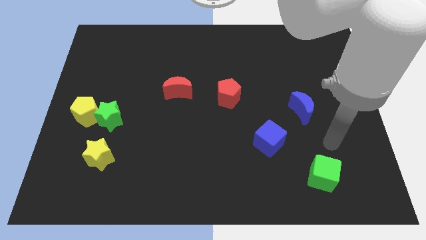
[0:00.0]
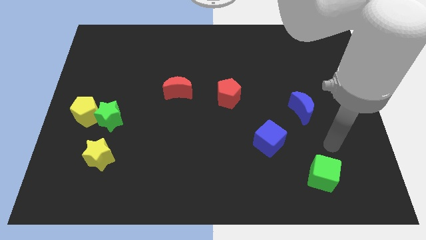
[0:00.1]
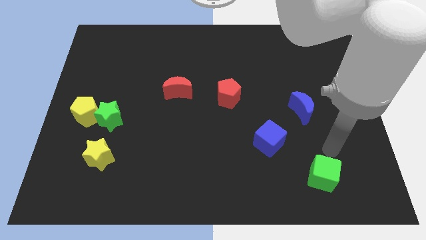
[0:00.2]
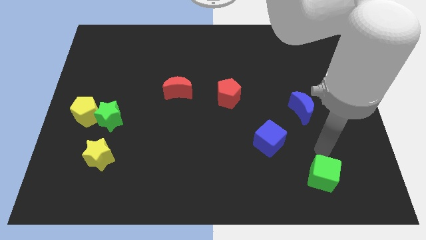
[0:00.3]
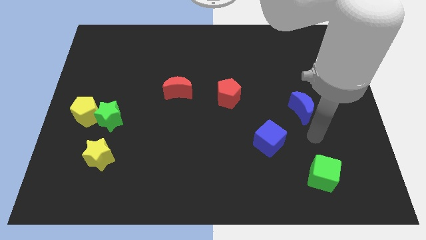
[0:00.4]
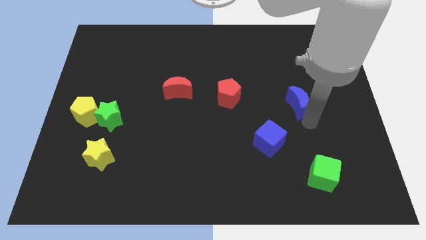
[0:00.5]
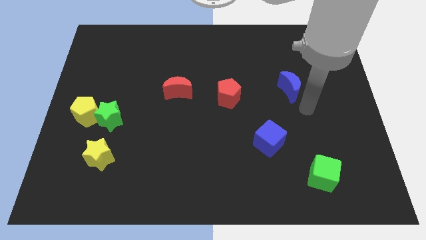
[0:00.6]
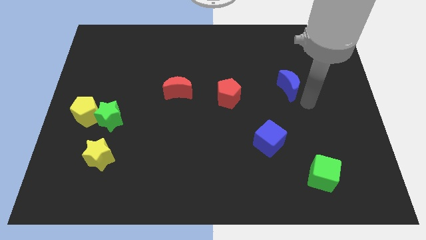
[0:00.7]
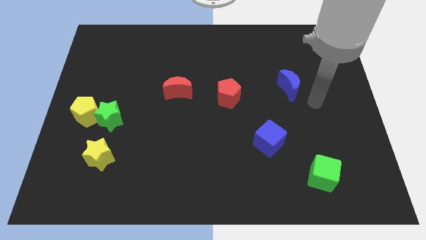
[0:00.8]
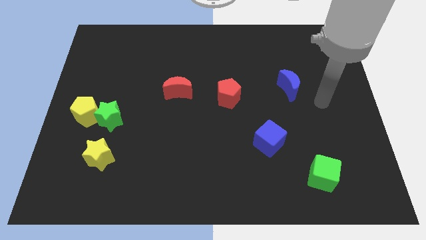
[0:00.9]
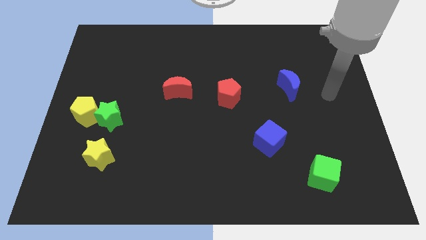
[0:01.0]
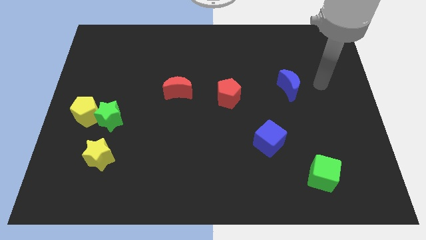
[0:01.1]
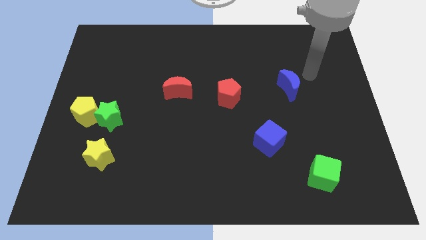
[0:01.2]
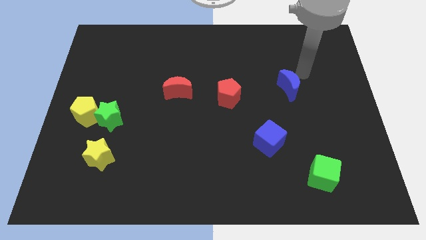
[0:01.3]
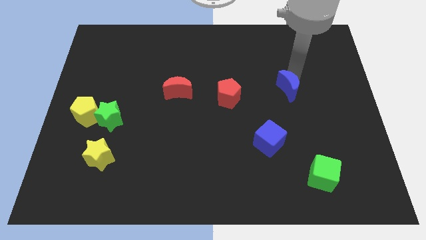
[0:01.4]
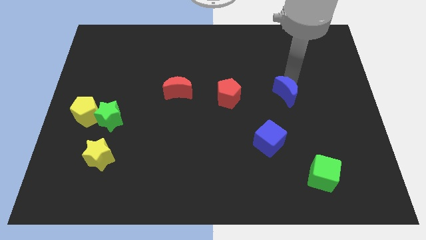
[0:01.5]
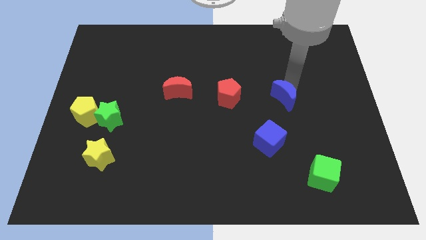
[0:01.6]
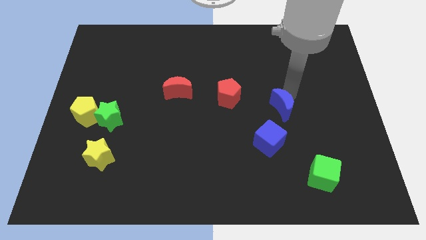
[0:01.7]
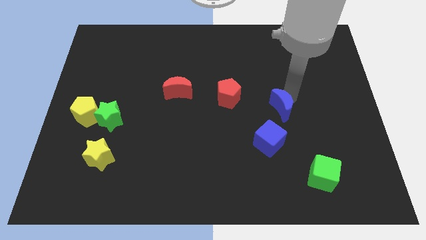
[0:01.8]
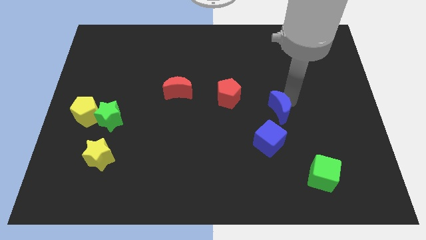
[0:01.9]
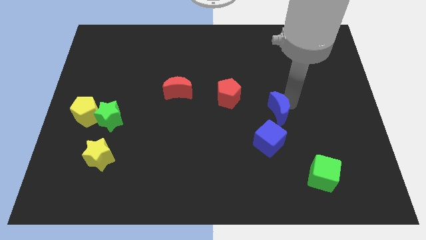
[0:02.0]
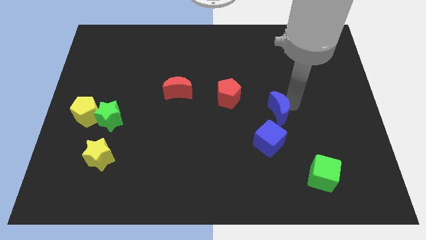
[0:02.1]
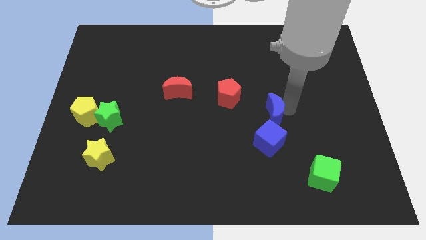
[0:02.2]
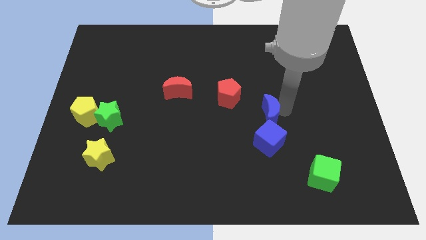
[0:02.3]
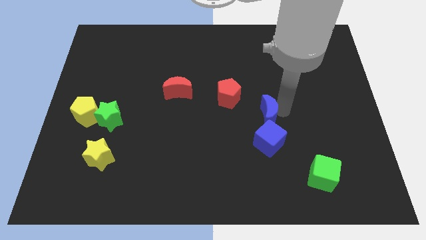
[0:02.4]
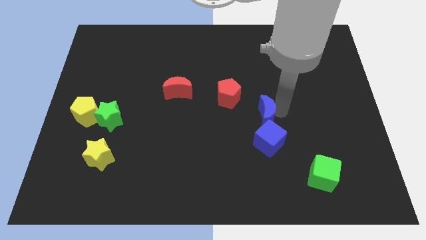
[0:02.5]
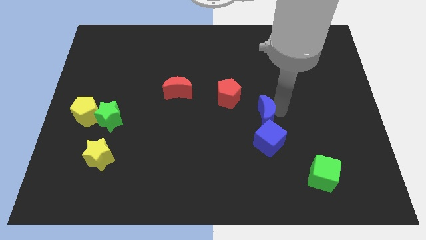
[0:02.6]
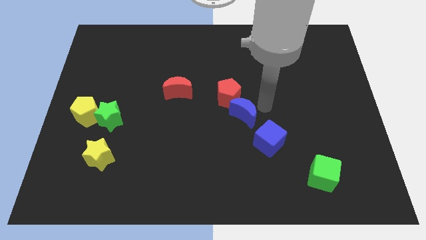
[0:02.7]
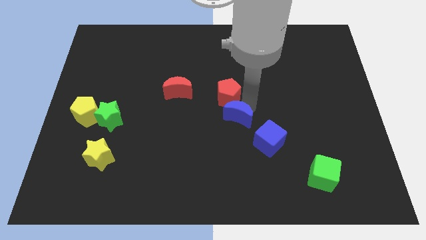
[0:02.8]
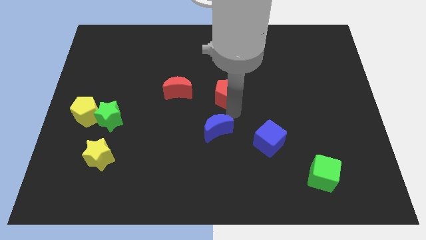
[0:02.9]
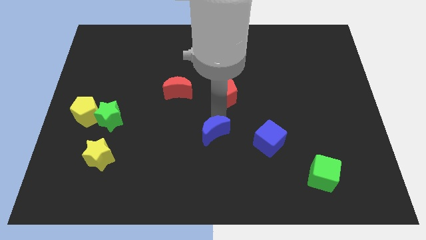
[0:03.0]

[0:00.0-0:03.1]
slide blue moon to the left of blue cube

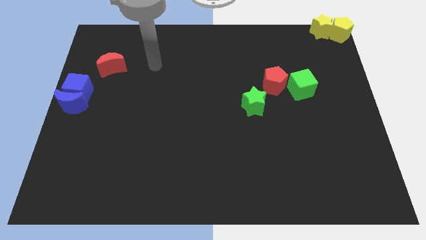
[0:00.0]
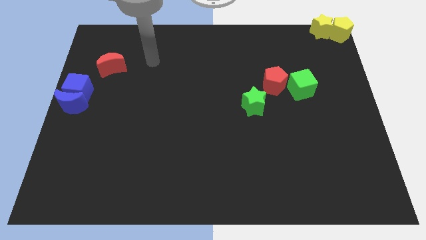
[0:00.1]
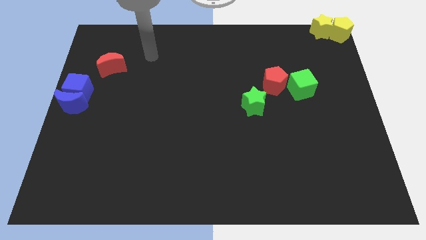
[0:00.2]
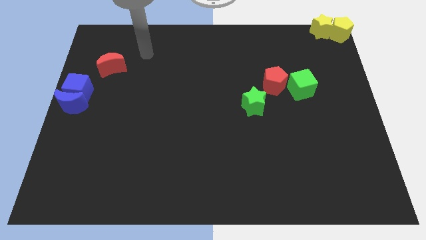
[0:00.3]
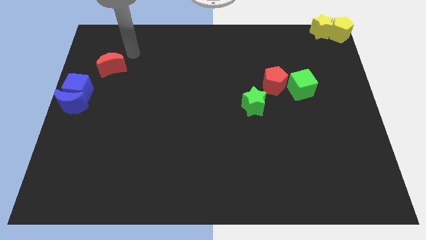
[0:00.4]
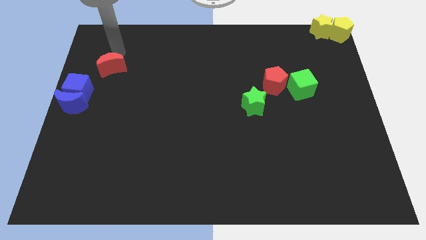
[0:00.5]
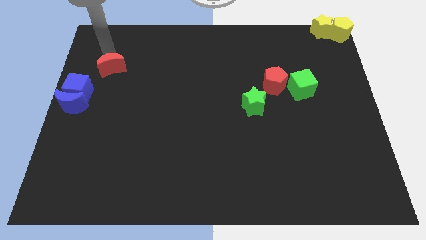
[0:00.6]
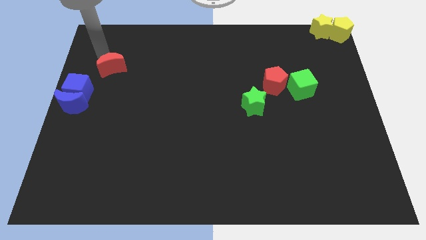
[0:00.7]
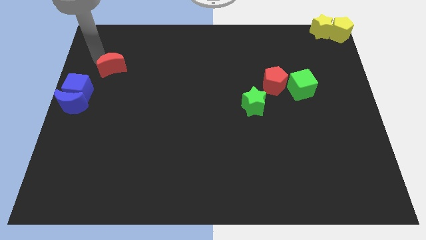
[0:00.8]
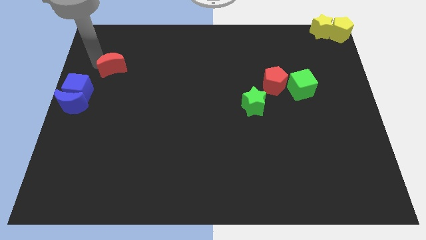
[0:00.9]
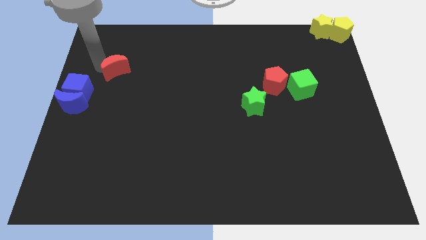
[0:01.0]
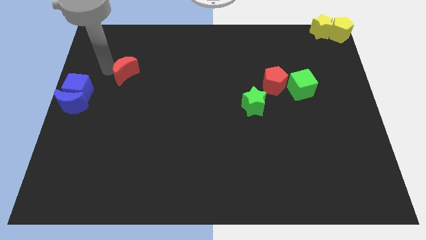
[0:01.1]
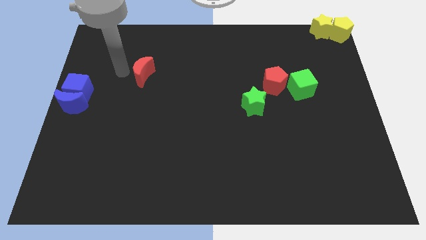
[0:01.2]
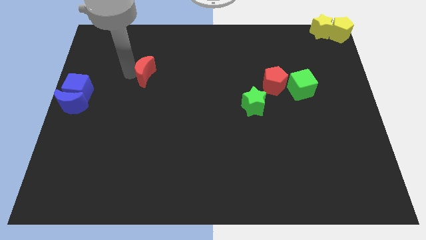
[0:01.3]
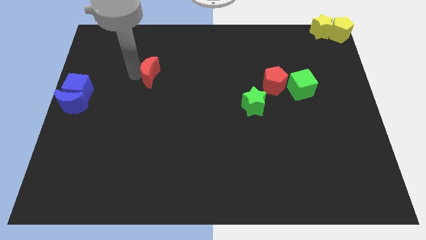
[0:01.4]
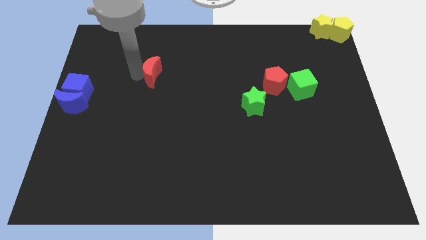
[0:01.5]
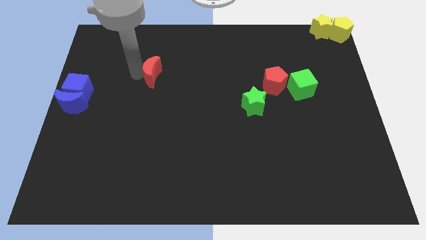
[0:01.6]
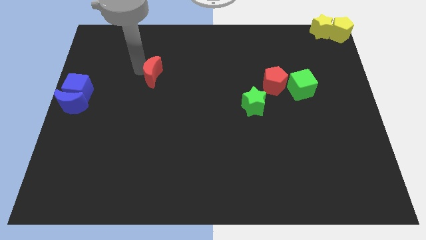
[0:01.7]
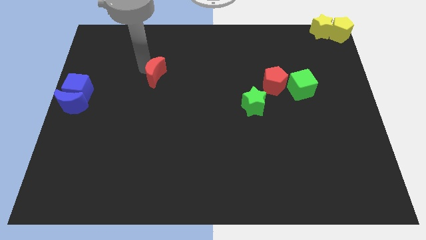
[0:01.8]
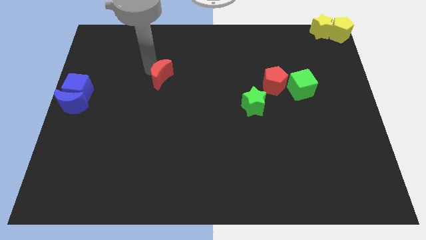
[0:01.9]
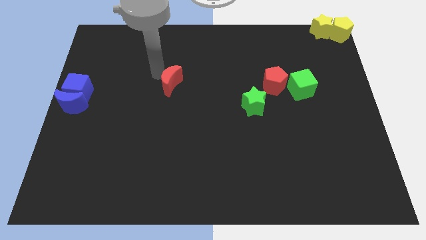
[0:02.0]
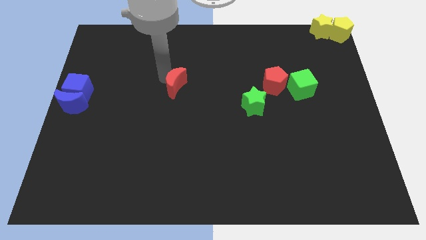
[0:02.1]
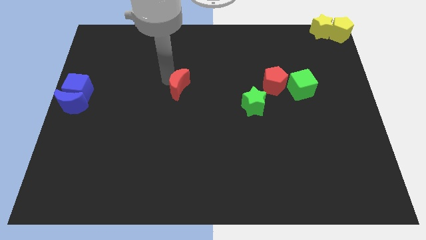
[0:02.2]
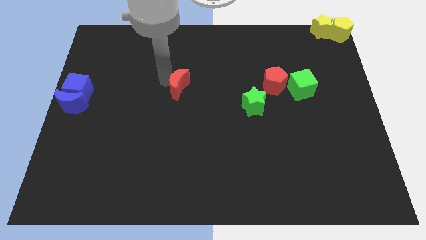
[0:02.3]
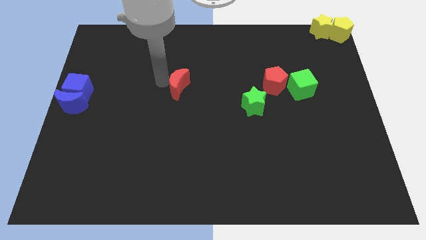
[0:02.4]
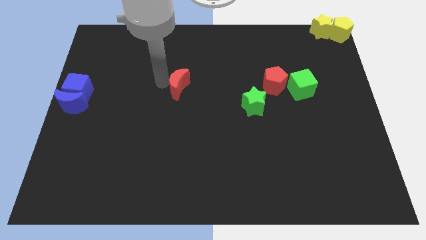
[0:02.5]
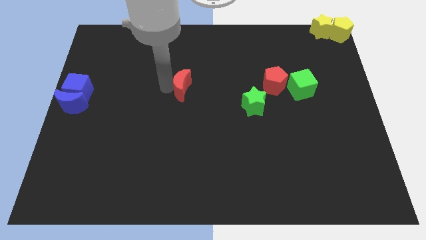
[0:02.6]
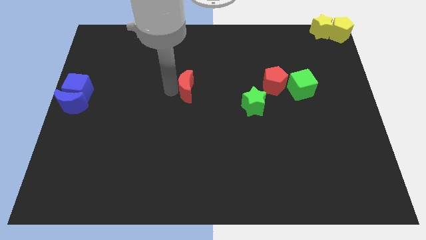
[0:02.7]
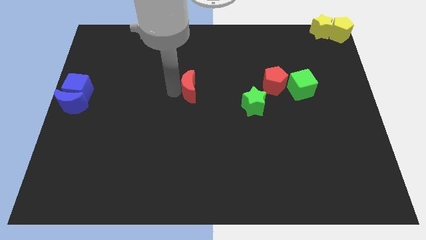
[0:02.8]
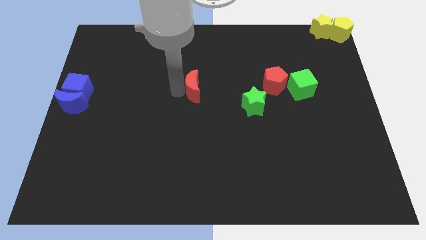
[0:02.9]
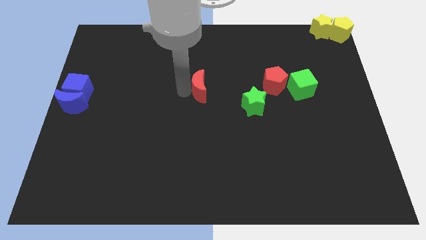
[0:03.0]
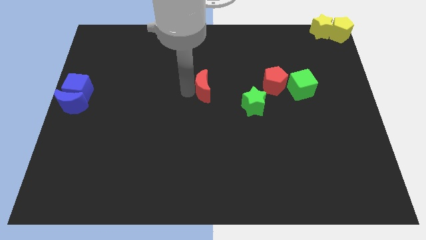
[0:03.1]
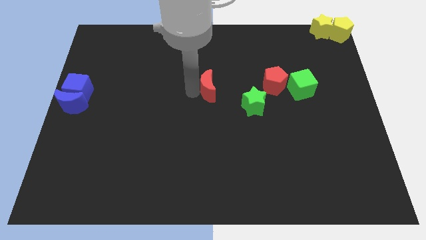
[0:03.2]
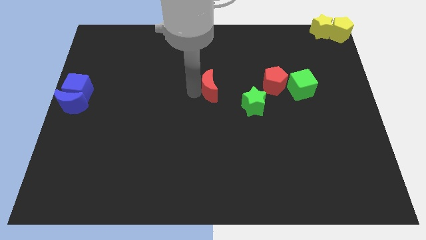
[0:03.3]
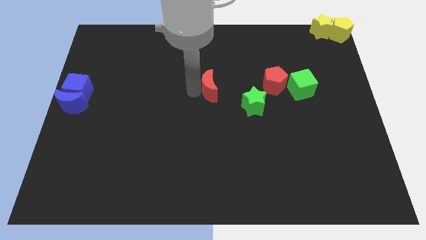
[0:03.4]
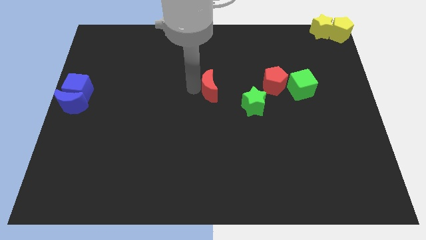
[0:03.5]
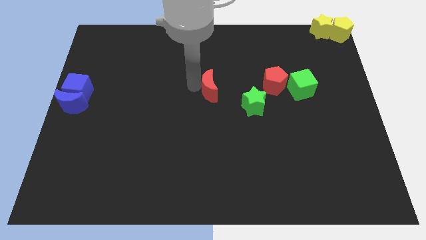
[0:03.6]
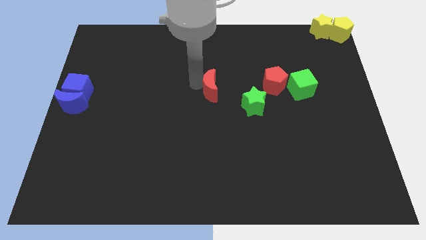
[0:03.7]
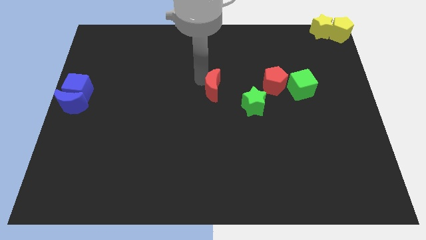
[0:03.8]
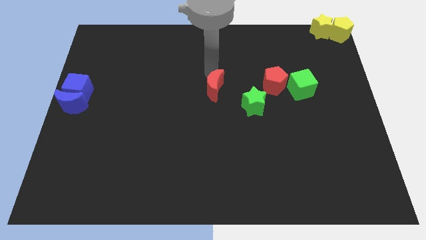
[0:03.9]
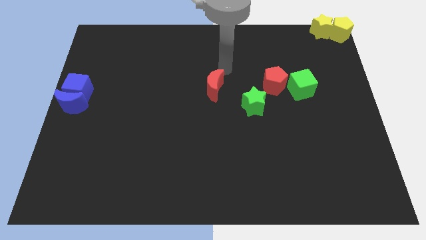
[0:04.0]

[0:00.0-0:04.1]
place the red moon at the center

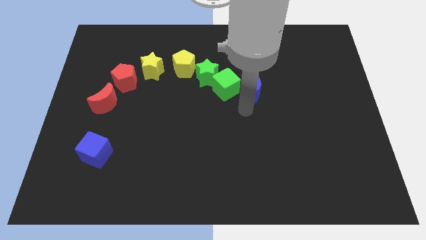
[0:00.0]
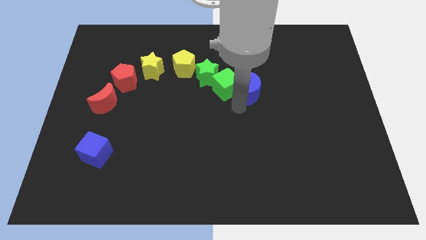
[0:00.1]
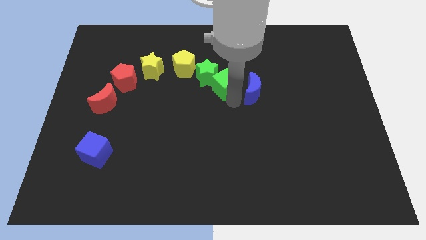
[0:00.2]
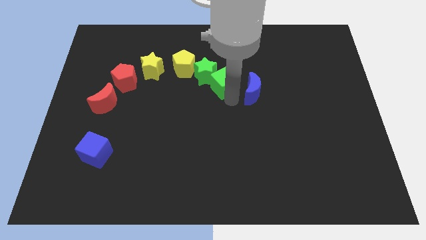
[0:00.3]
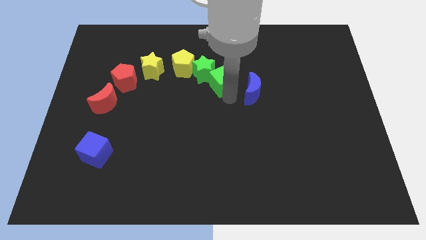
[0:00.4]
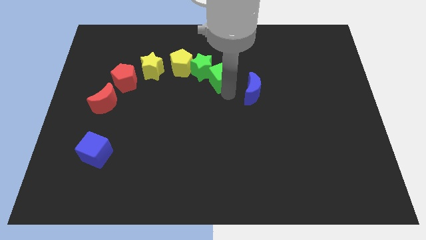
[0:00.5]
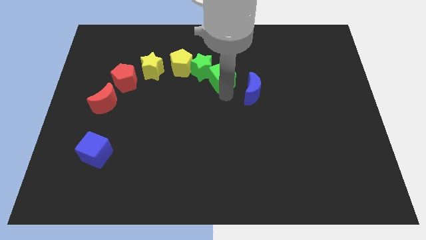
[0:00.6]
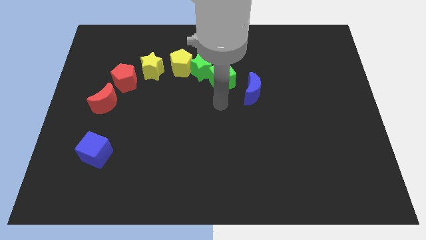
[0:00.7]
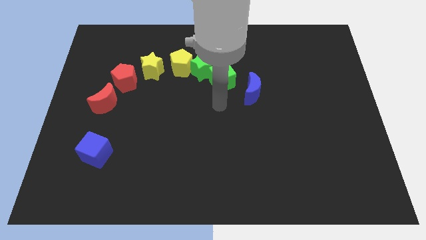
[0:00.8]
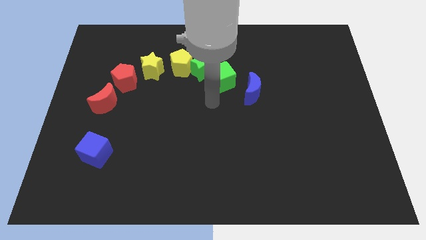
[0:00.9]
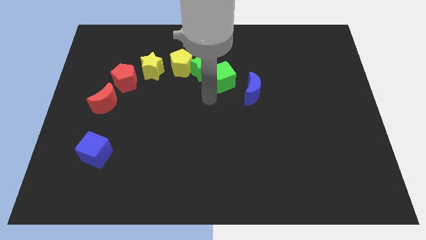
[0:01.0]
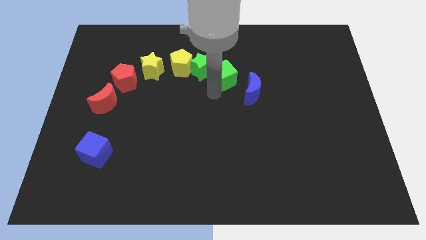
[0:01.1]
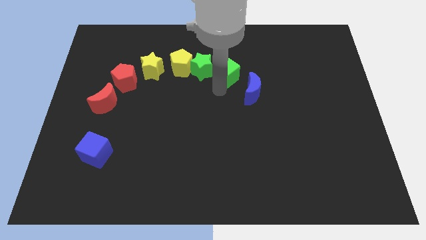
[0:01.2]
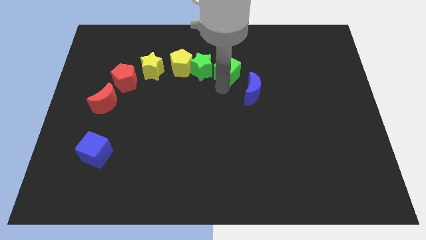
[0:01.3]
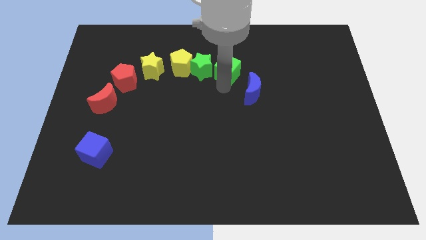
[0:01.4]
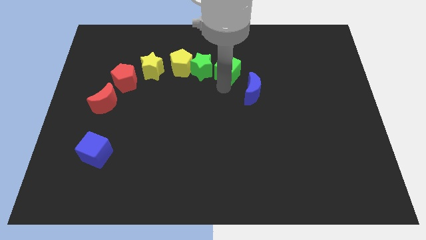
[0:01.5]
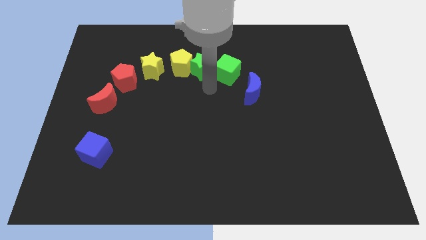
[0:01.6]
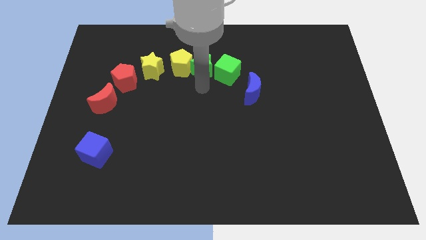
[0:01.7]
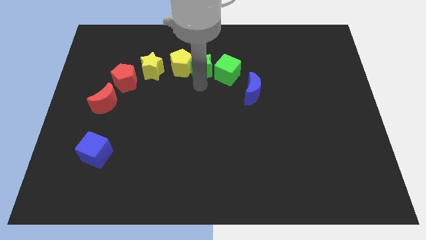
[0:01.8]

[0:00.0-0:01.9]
move green cube into green star
